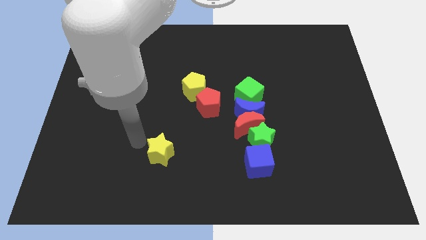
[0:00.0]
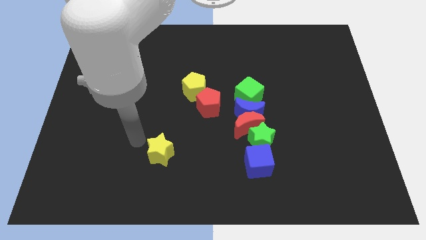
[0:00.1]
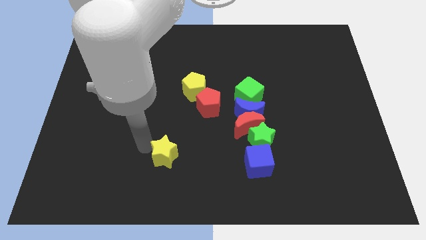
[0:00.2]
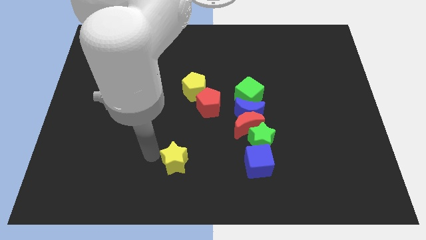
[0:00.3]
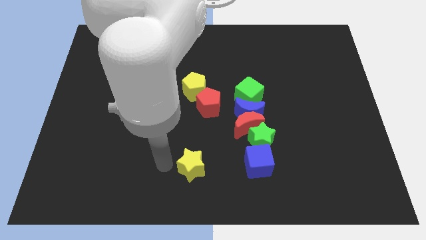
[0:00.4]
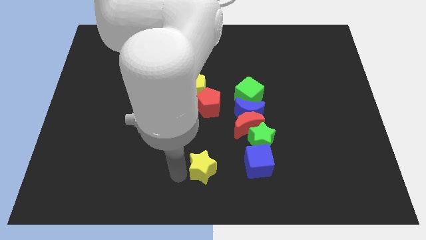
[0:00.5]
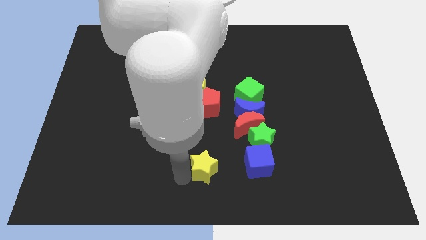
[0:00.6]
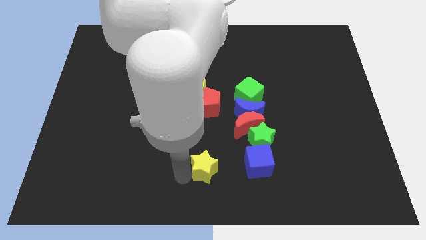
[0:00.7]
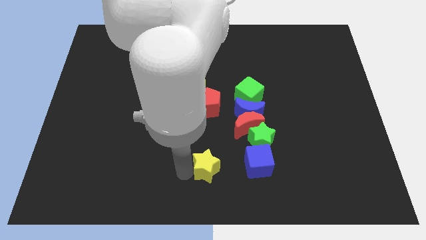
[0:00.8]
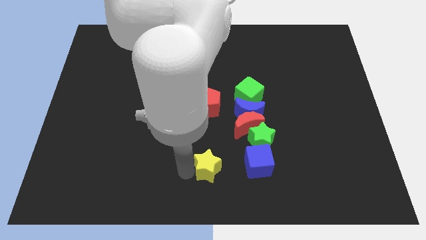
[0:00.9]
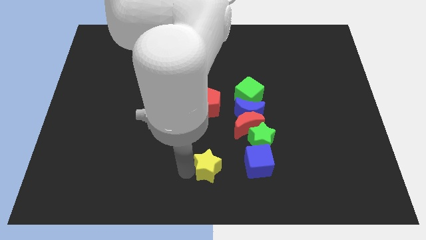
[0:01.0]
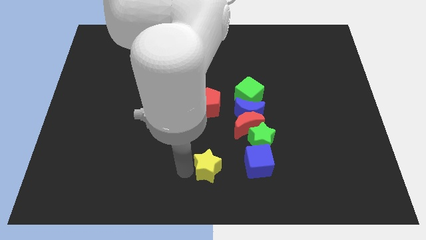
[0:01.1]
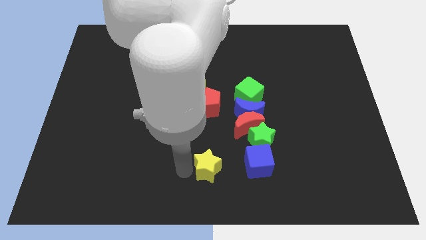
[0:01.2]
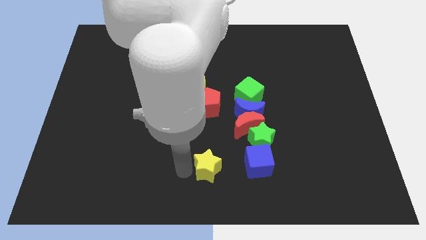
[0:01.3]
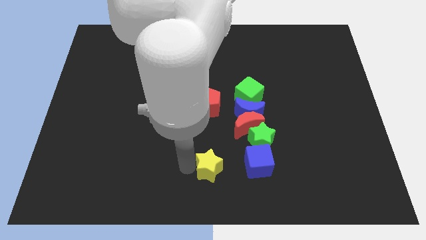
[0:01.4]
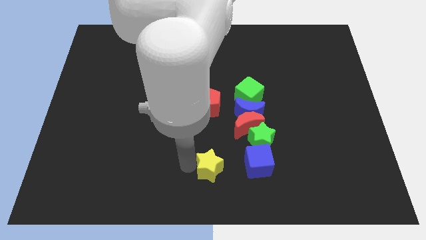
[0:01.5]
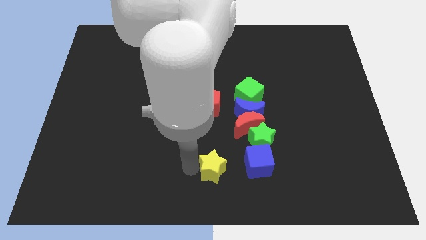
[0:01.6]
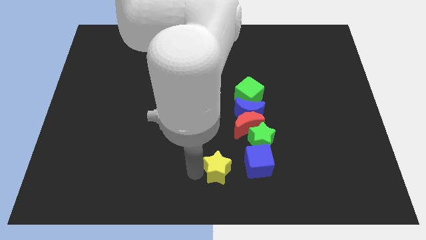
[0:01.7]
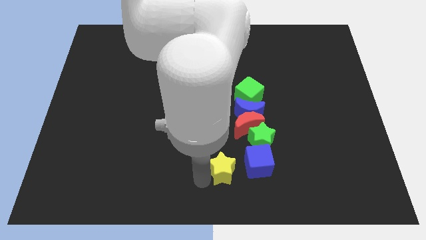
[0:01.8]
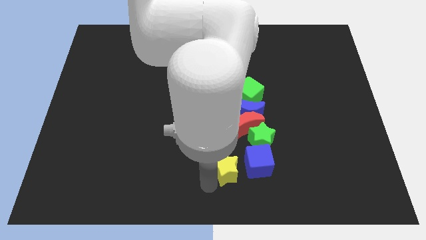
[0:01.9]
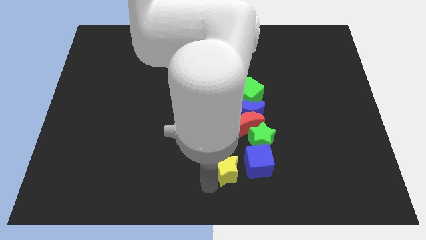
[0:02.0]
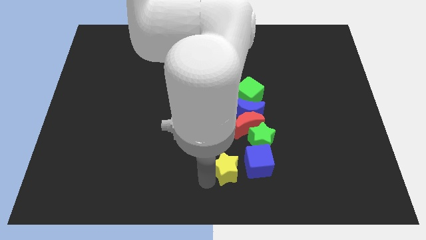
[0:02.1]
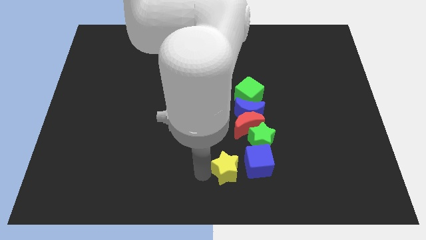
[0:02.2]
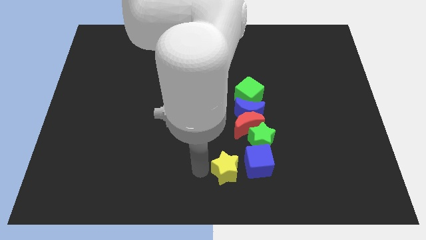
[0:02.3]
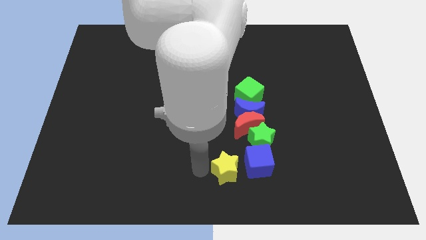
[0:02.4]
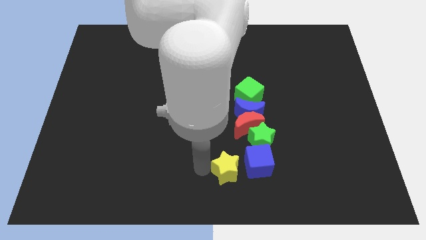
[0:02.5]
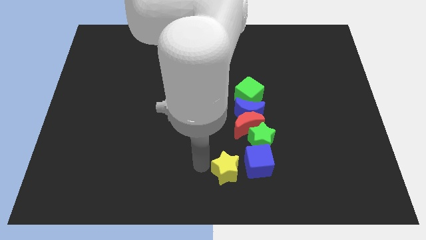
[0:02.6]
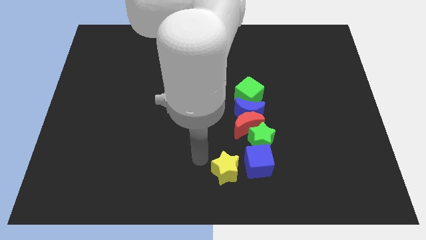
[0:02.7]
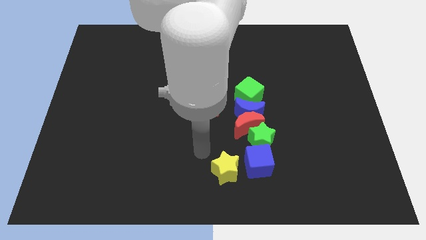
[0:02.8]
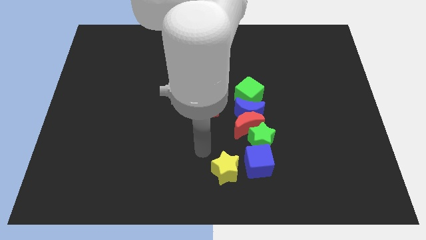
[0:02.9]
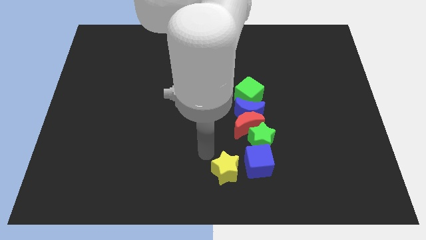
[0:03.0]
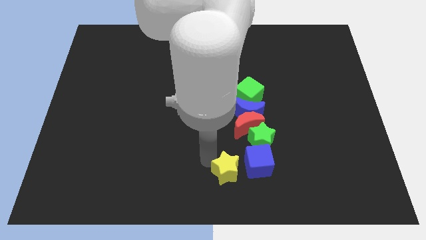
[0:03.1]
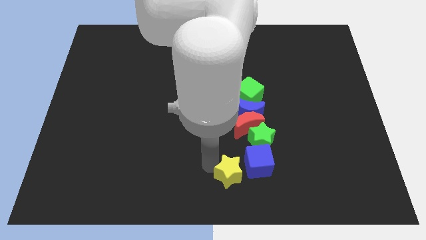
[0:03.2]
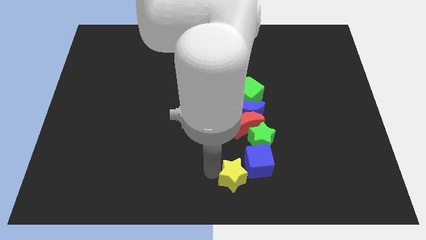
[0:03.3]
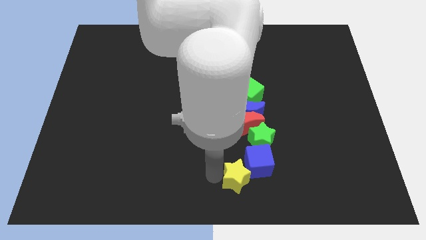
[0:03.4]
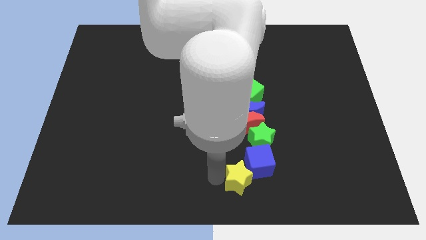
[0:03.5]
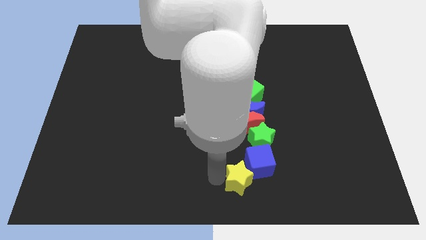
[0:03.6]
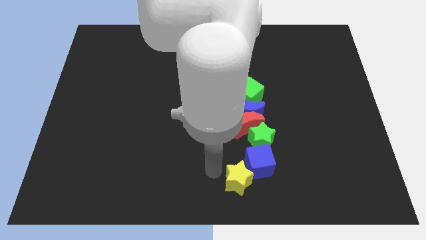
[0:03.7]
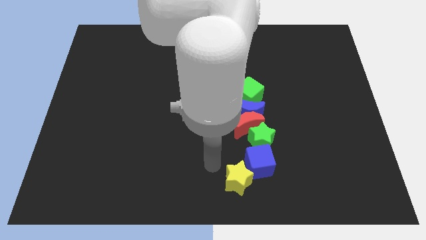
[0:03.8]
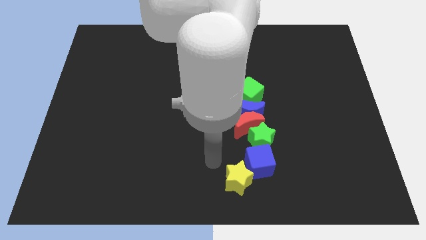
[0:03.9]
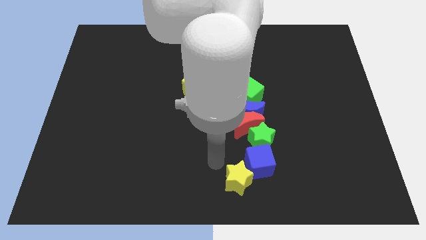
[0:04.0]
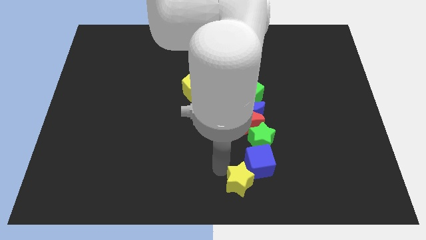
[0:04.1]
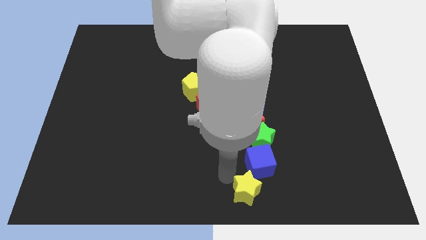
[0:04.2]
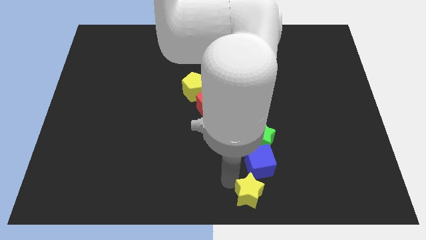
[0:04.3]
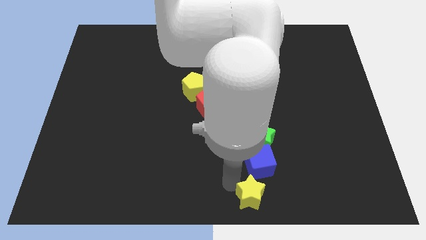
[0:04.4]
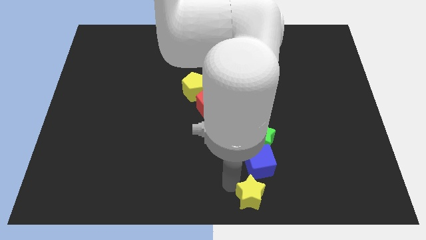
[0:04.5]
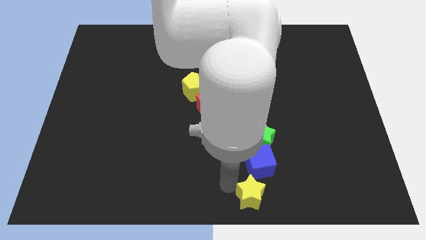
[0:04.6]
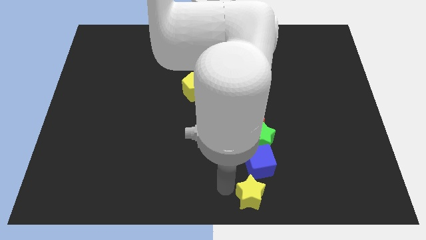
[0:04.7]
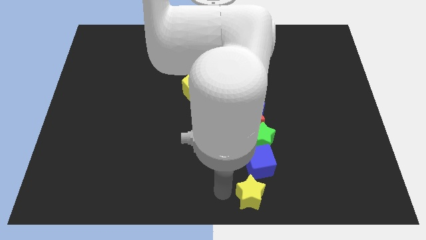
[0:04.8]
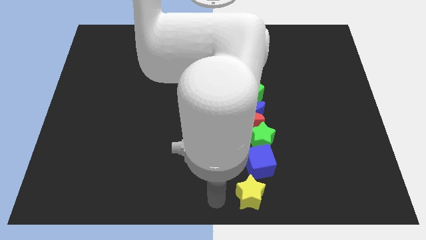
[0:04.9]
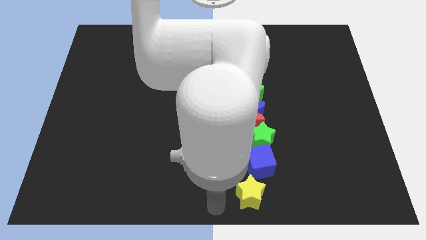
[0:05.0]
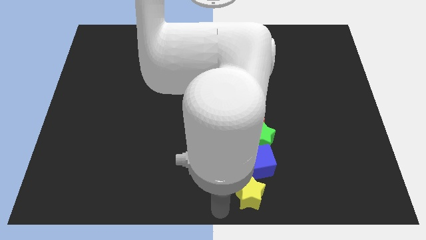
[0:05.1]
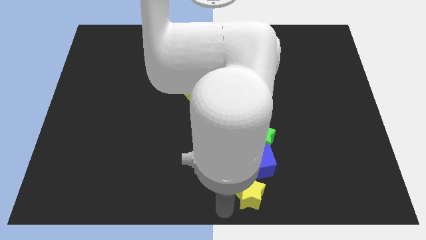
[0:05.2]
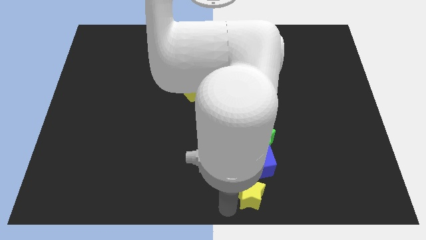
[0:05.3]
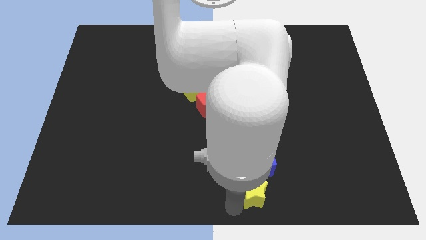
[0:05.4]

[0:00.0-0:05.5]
push the yellow star to the bottom of the blue cube

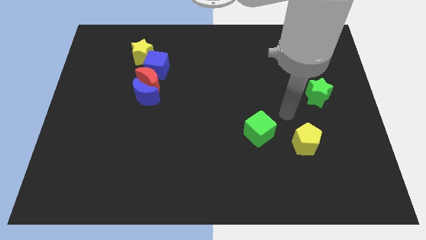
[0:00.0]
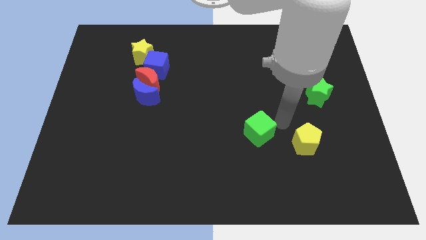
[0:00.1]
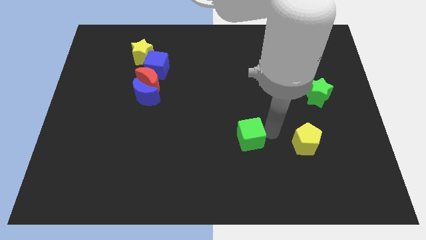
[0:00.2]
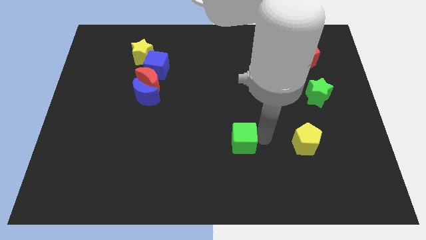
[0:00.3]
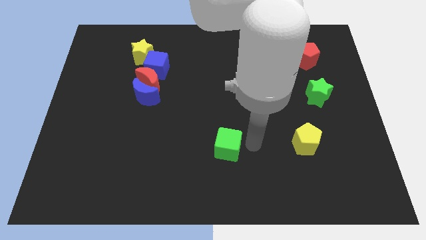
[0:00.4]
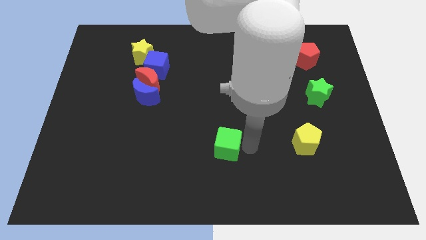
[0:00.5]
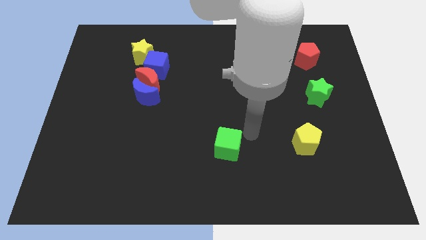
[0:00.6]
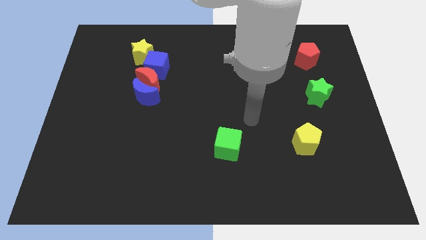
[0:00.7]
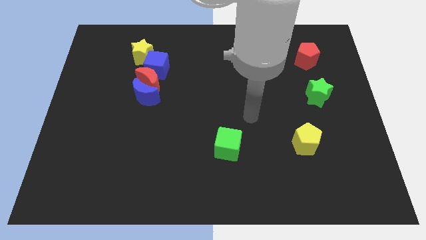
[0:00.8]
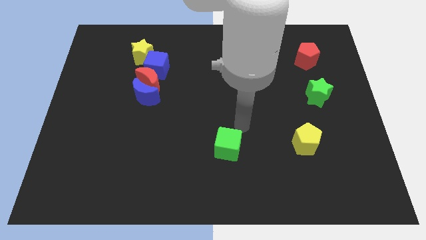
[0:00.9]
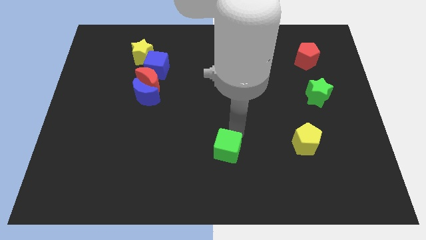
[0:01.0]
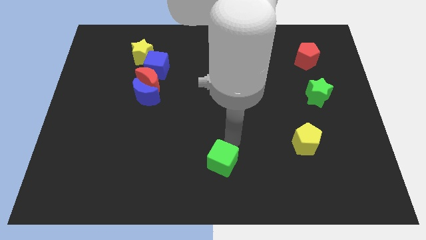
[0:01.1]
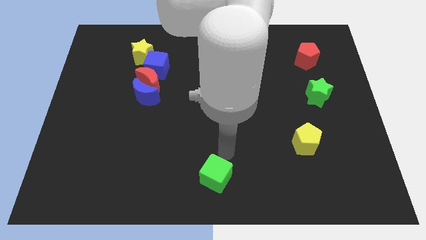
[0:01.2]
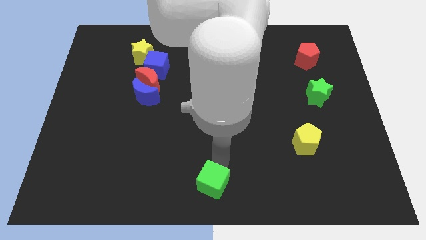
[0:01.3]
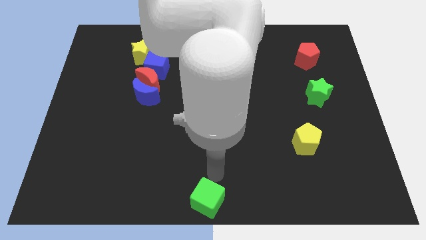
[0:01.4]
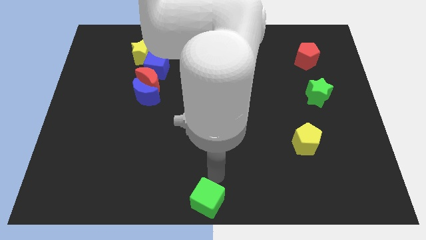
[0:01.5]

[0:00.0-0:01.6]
push green block to the bottom center of the board

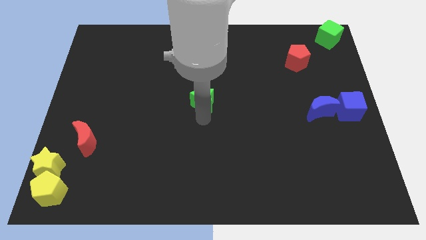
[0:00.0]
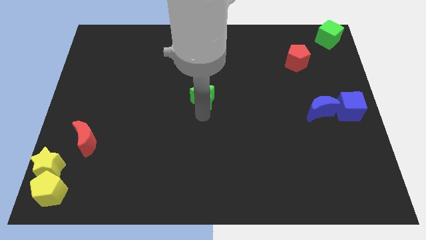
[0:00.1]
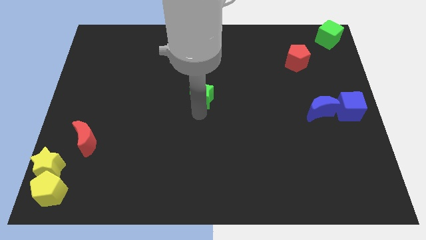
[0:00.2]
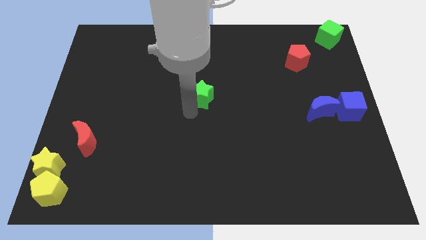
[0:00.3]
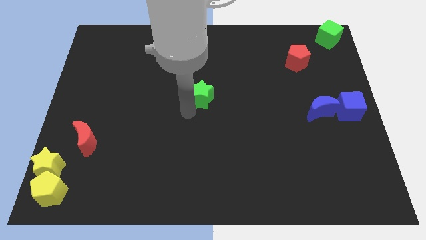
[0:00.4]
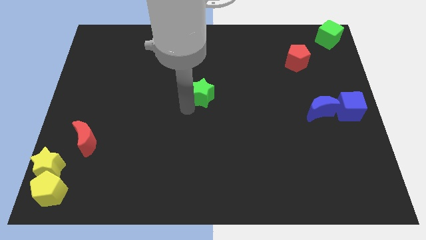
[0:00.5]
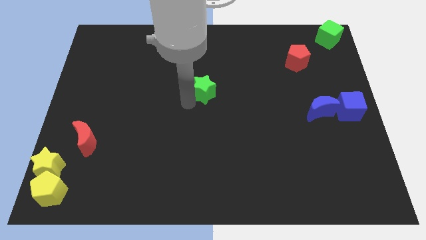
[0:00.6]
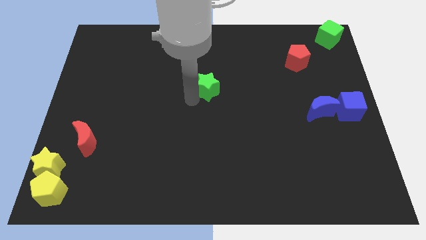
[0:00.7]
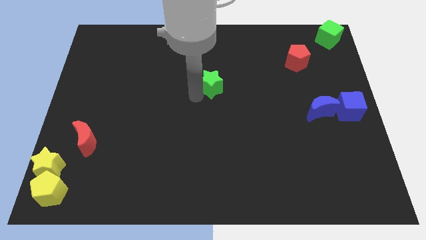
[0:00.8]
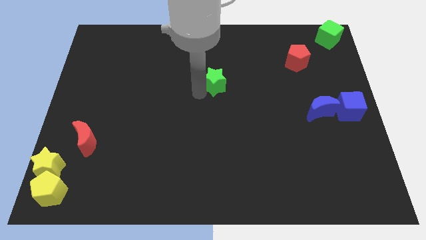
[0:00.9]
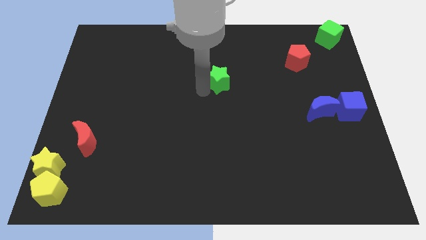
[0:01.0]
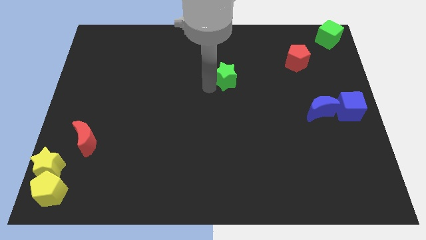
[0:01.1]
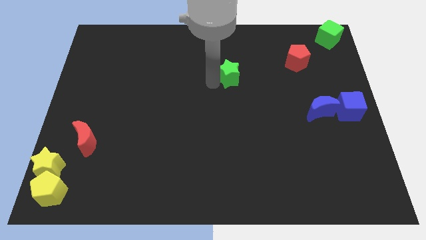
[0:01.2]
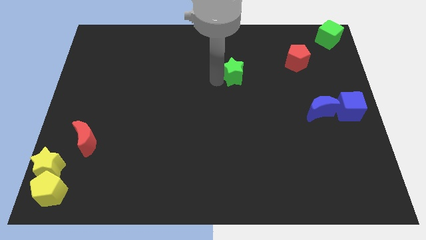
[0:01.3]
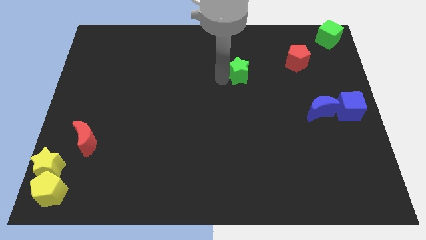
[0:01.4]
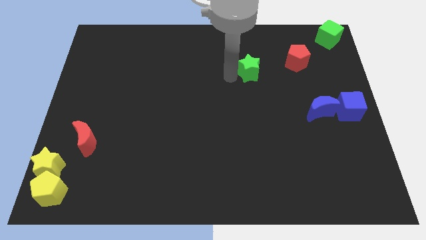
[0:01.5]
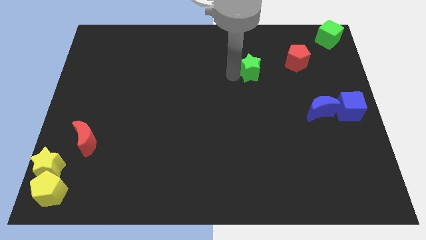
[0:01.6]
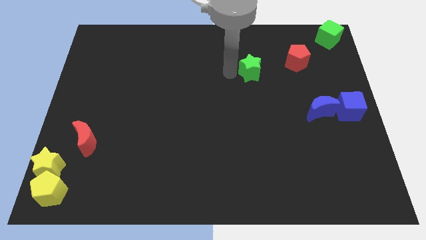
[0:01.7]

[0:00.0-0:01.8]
move the green star left of the red pentagon
